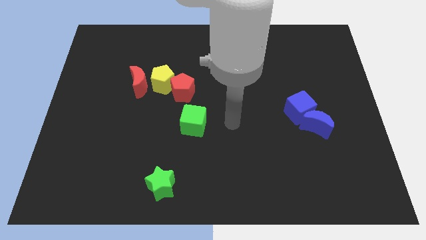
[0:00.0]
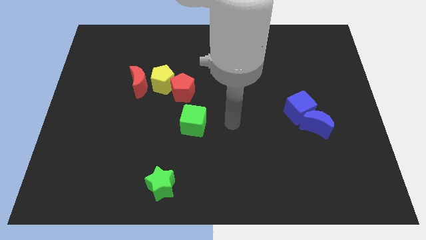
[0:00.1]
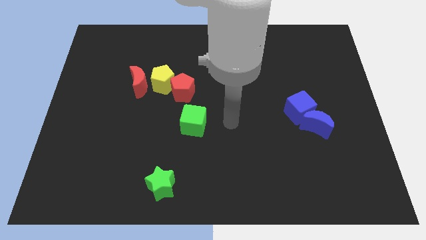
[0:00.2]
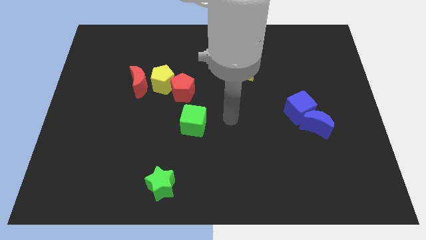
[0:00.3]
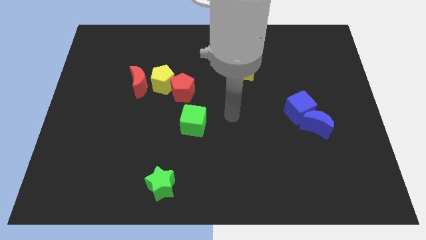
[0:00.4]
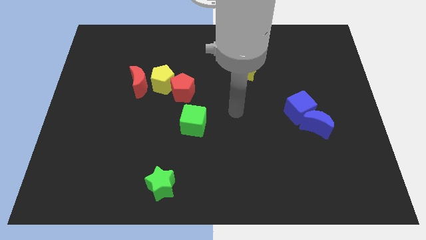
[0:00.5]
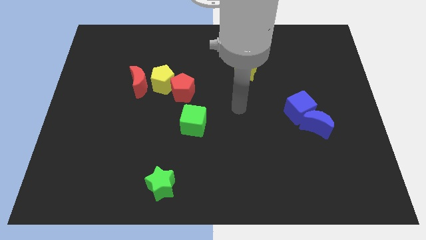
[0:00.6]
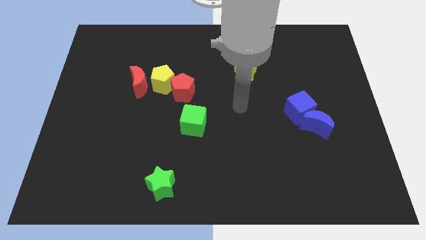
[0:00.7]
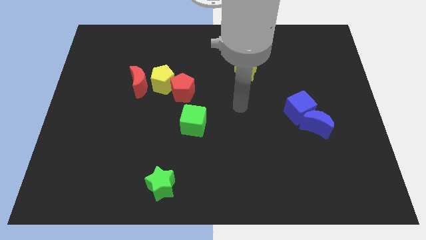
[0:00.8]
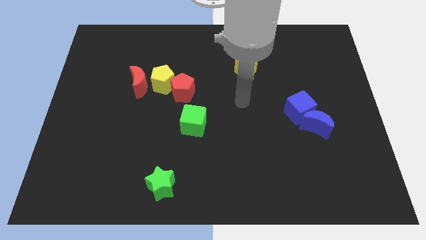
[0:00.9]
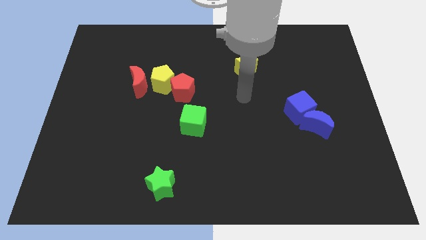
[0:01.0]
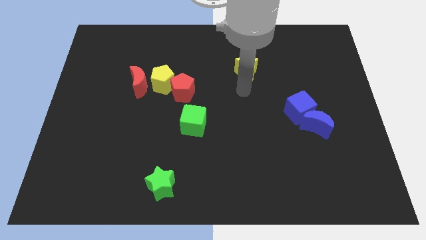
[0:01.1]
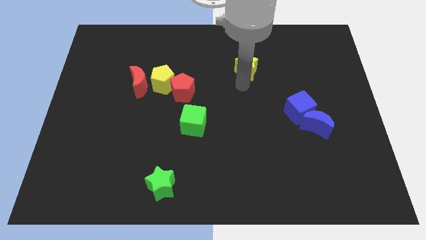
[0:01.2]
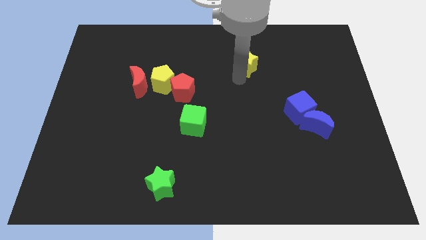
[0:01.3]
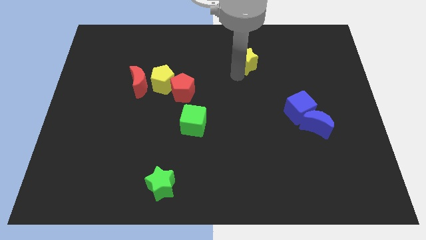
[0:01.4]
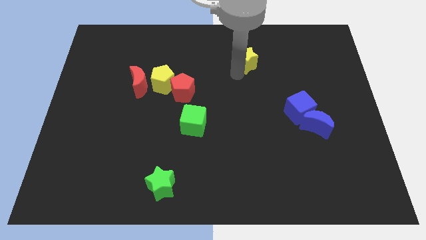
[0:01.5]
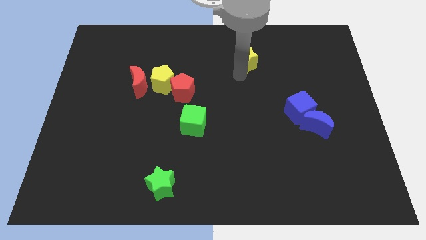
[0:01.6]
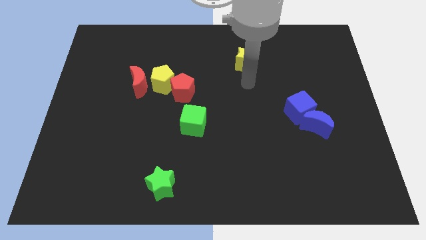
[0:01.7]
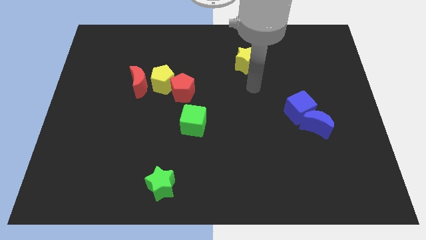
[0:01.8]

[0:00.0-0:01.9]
slightly move the yellow star upwards

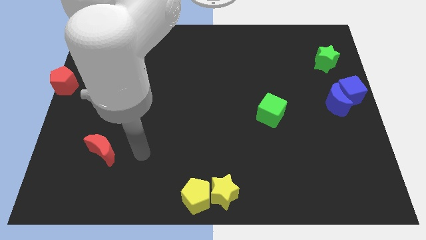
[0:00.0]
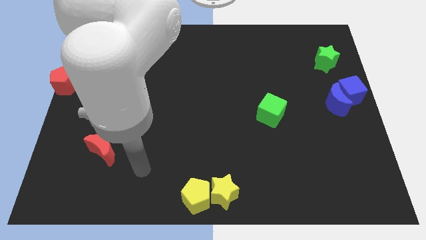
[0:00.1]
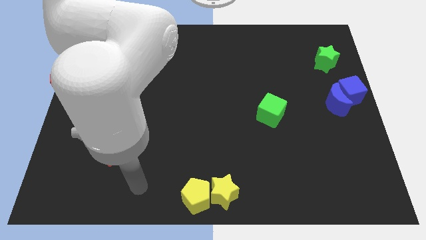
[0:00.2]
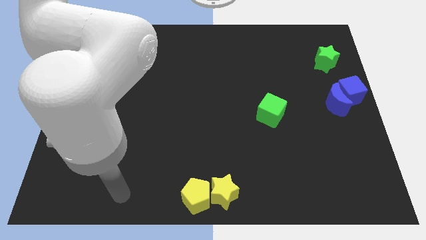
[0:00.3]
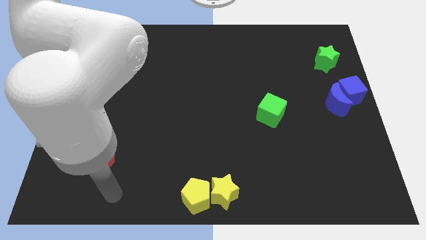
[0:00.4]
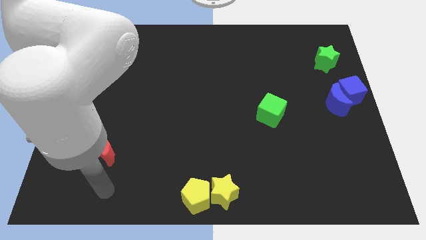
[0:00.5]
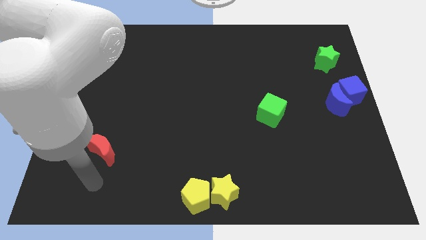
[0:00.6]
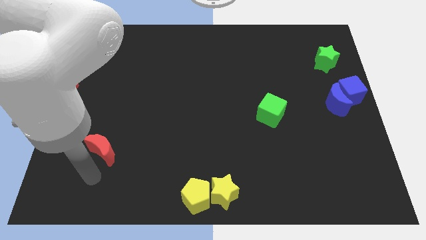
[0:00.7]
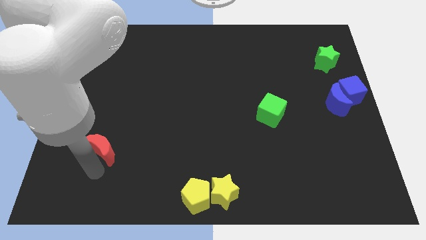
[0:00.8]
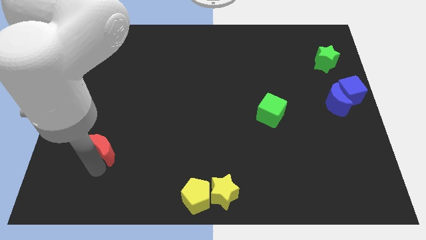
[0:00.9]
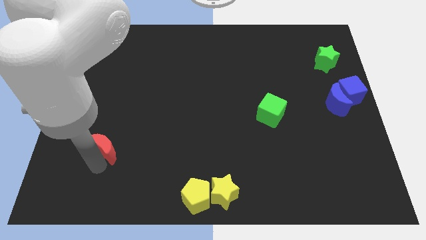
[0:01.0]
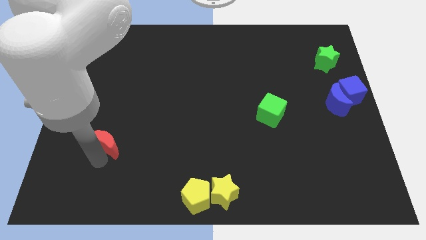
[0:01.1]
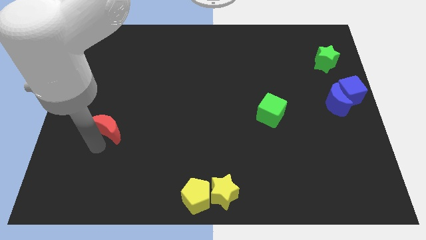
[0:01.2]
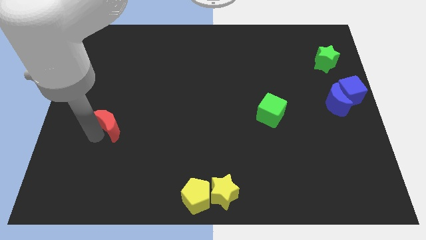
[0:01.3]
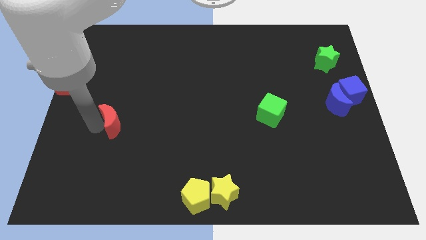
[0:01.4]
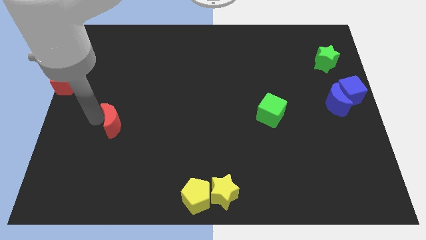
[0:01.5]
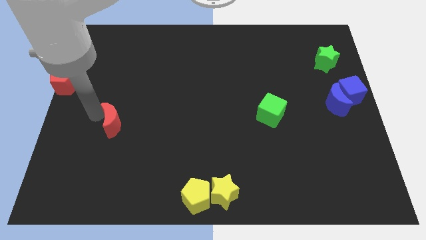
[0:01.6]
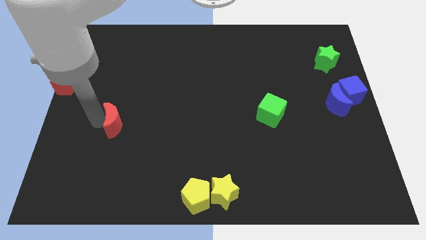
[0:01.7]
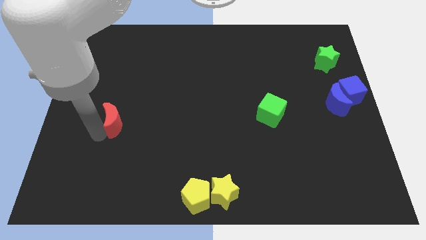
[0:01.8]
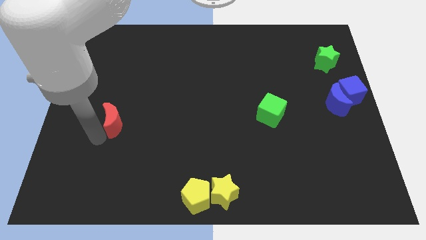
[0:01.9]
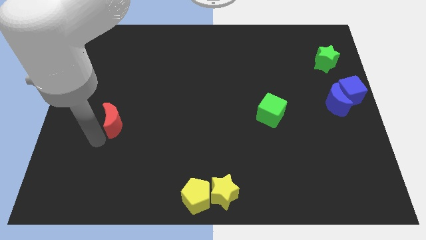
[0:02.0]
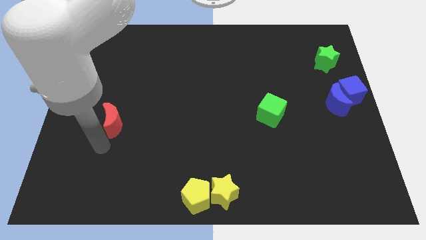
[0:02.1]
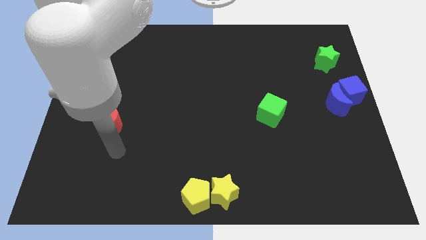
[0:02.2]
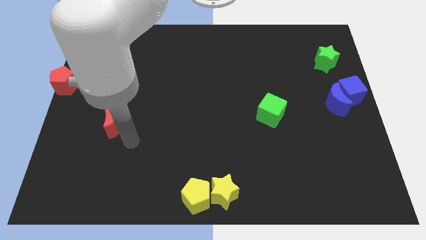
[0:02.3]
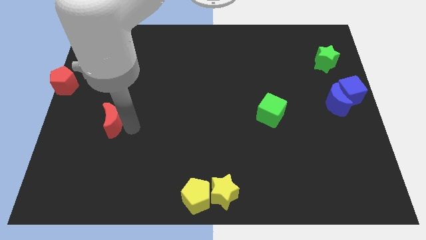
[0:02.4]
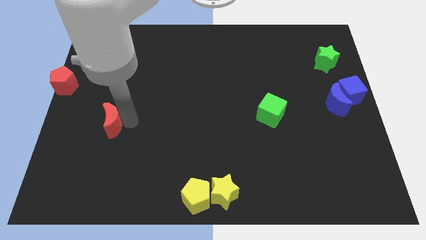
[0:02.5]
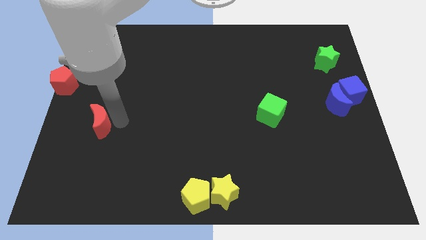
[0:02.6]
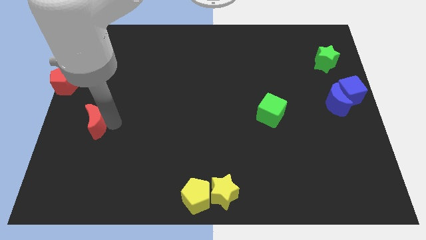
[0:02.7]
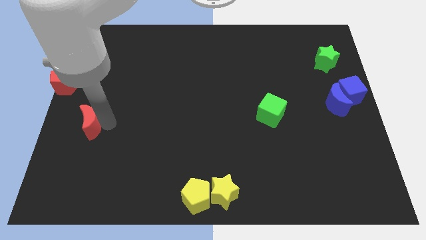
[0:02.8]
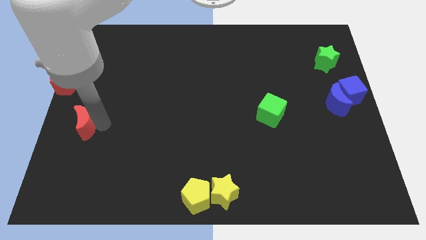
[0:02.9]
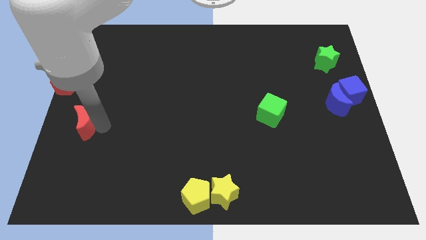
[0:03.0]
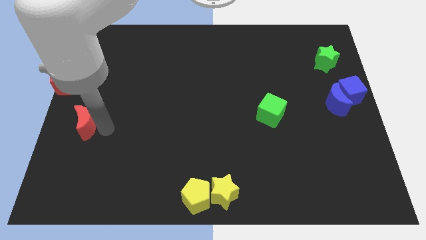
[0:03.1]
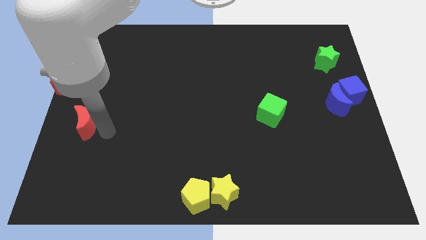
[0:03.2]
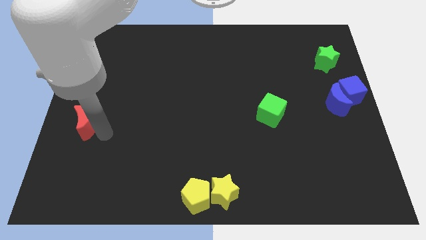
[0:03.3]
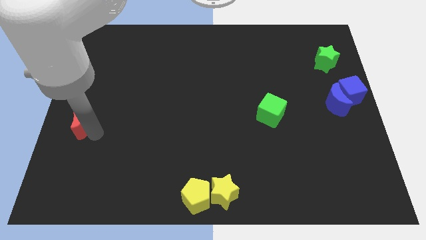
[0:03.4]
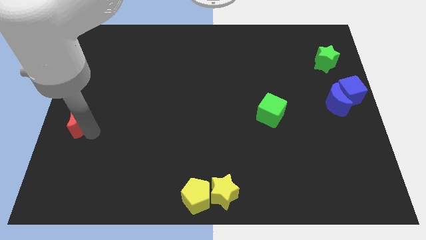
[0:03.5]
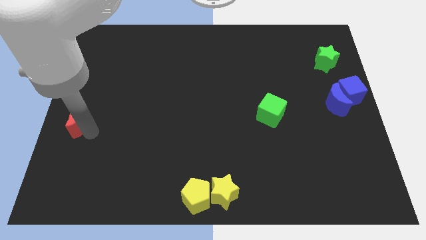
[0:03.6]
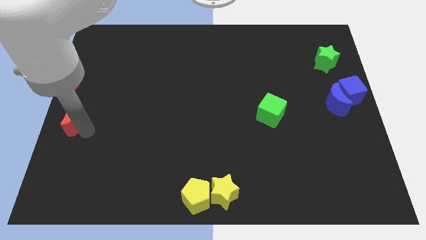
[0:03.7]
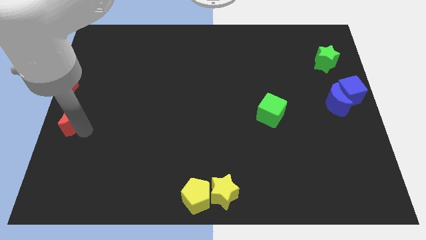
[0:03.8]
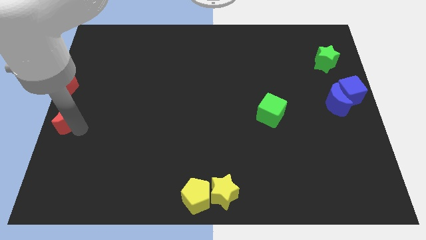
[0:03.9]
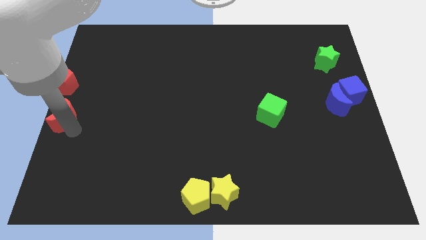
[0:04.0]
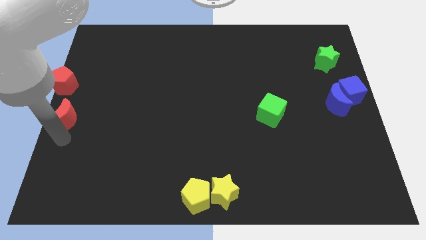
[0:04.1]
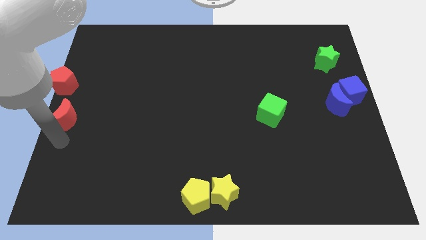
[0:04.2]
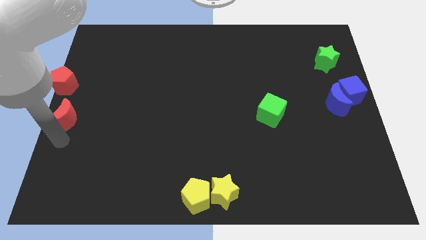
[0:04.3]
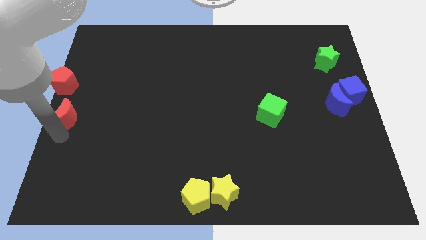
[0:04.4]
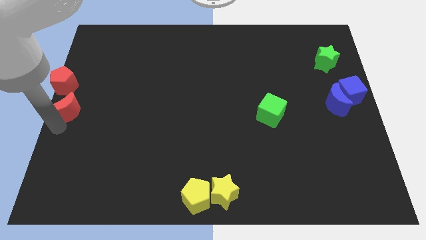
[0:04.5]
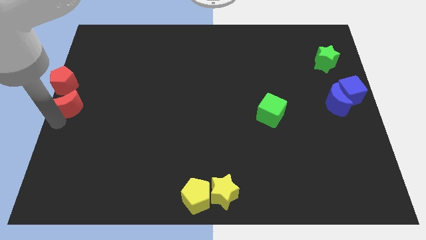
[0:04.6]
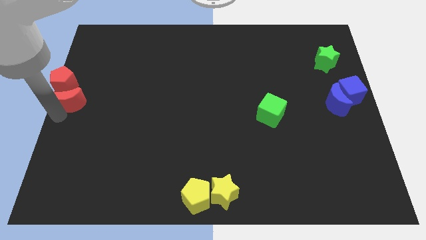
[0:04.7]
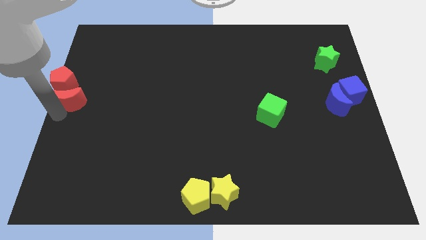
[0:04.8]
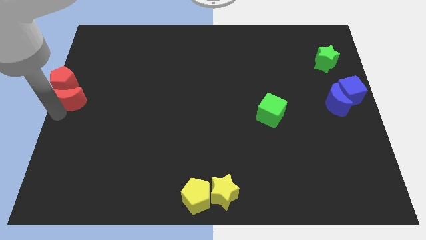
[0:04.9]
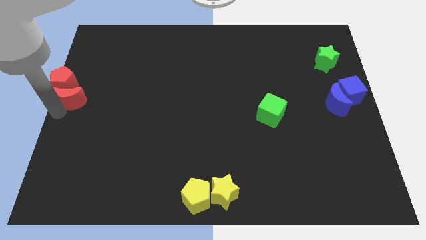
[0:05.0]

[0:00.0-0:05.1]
push the red crescent towards the bottom side of the red pentagon

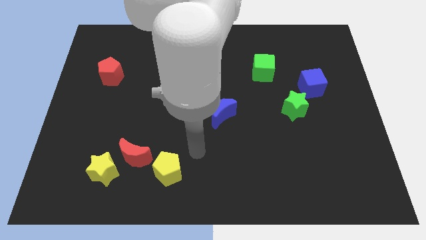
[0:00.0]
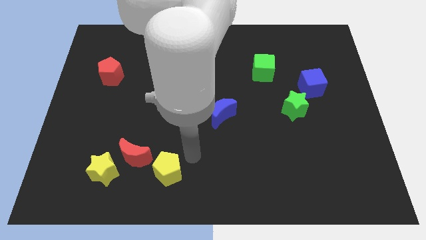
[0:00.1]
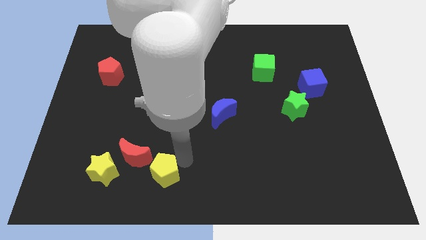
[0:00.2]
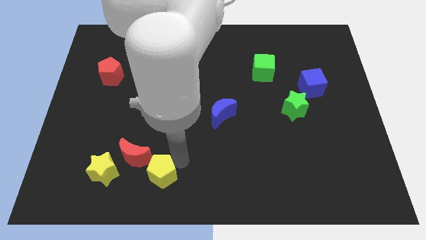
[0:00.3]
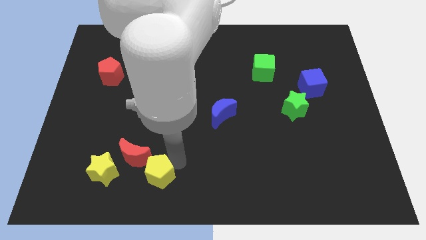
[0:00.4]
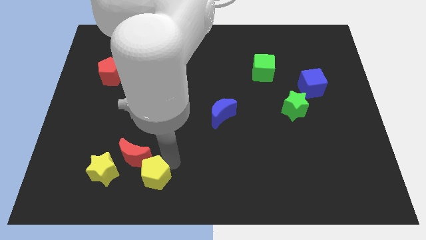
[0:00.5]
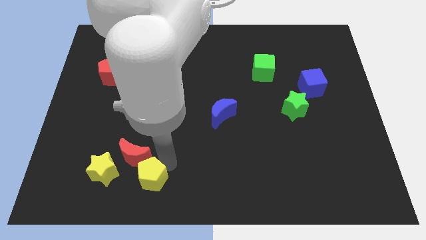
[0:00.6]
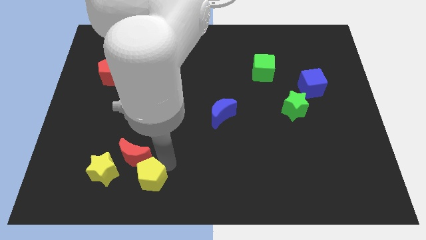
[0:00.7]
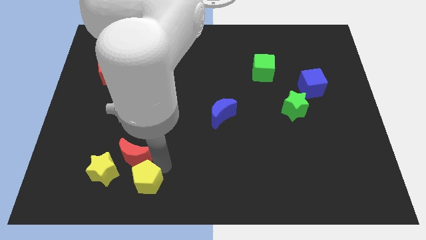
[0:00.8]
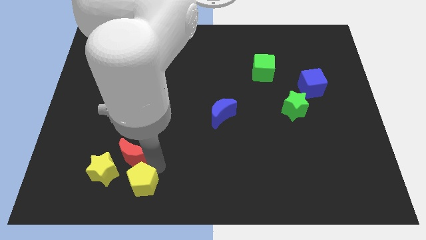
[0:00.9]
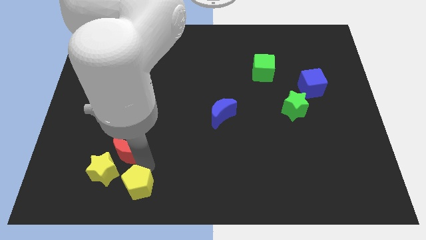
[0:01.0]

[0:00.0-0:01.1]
place your arm in between red moon and yellow pentagon

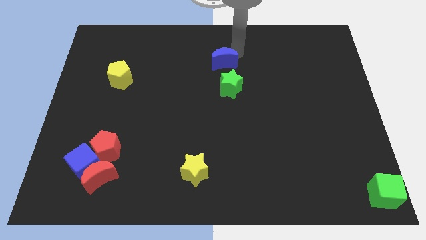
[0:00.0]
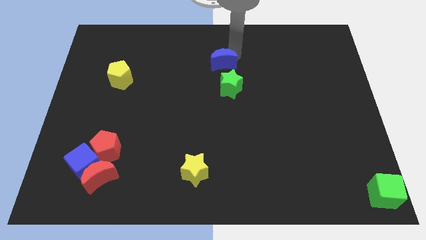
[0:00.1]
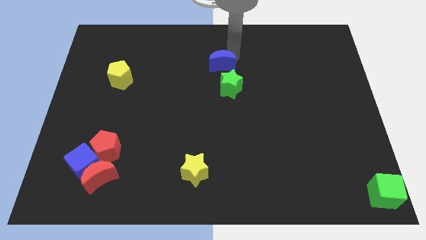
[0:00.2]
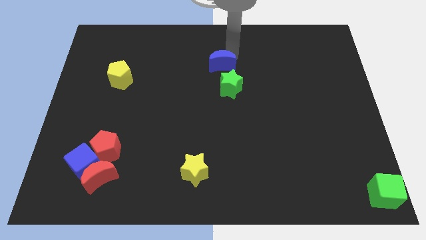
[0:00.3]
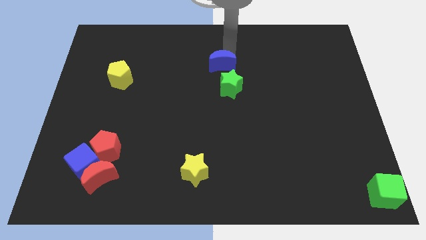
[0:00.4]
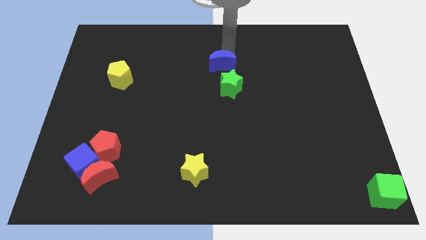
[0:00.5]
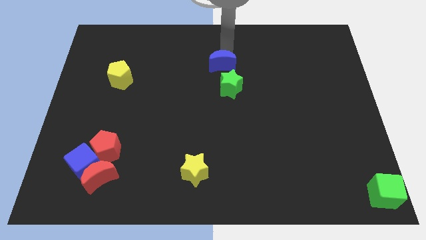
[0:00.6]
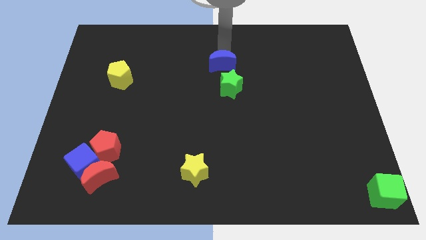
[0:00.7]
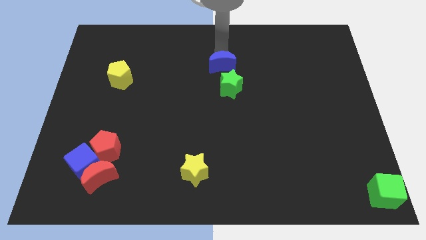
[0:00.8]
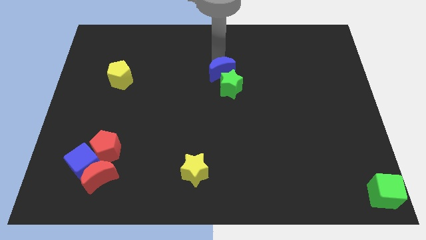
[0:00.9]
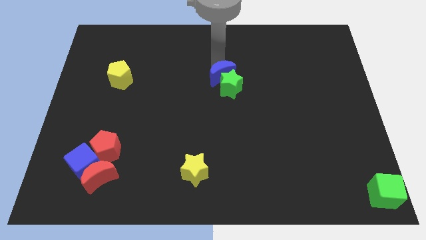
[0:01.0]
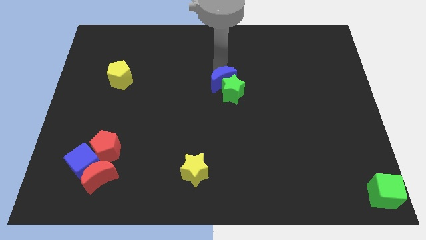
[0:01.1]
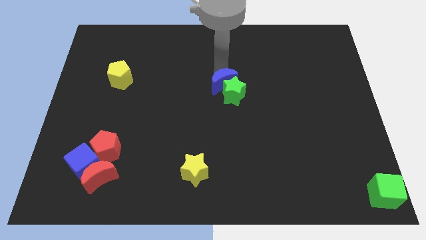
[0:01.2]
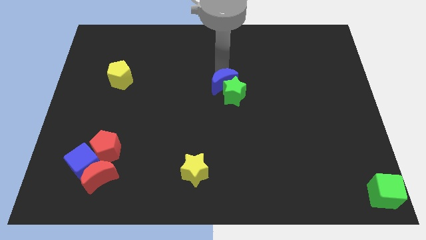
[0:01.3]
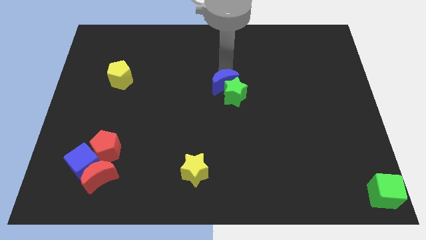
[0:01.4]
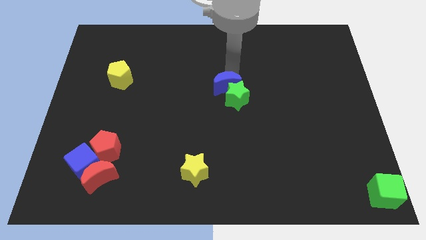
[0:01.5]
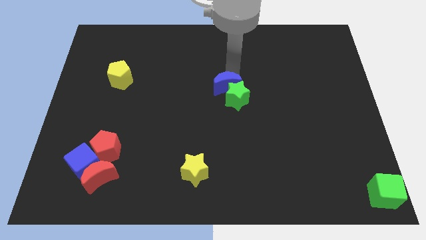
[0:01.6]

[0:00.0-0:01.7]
push the blue moon into the top of the green star
